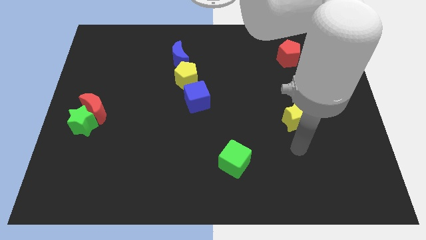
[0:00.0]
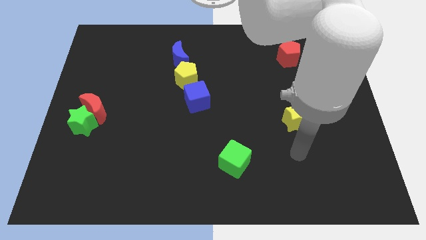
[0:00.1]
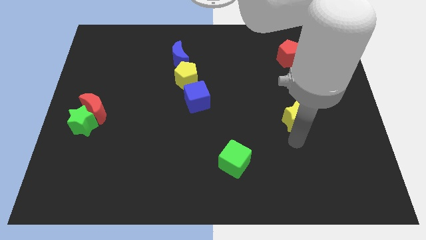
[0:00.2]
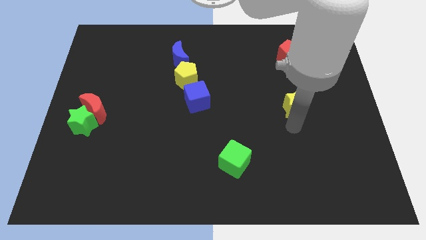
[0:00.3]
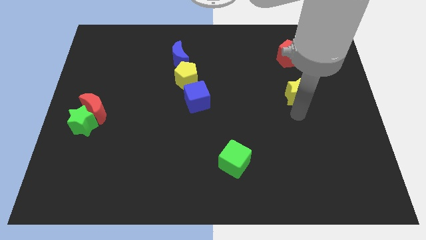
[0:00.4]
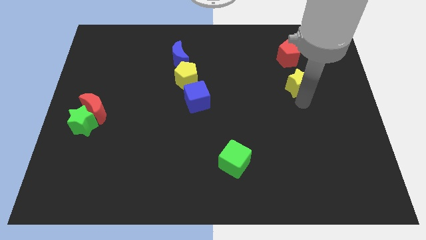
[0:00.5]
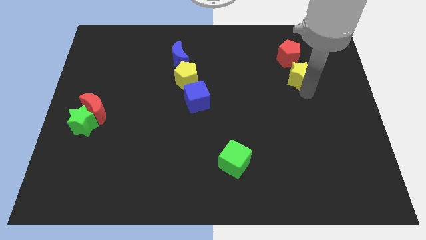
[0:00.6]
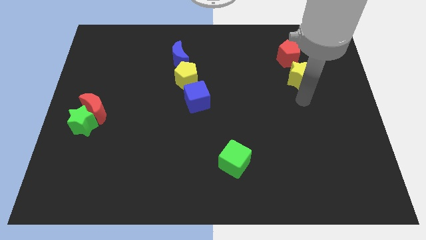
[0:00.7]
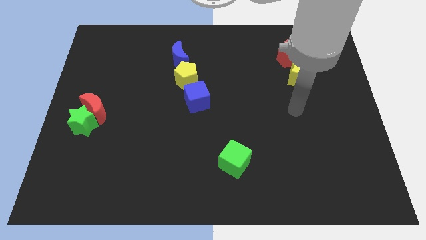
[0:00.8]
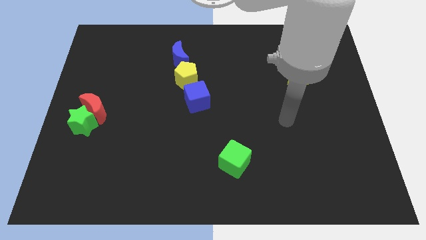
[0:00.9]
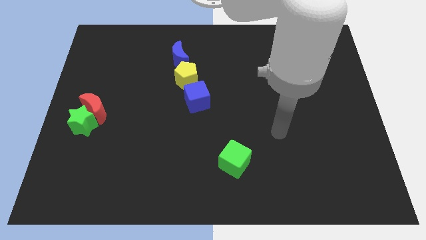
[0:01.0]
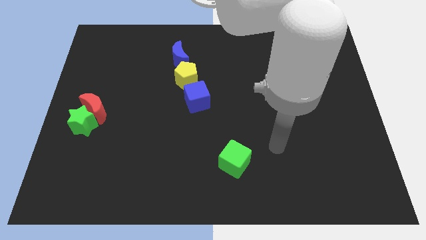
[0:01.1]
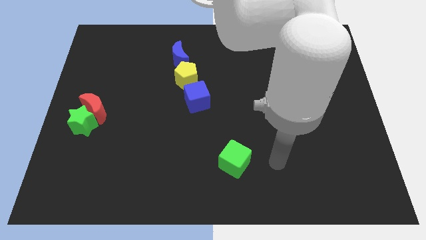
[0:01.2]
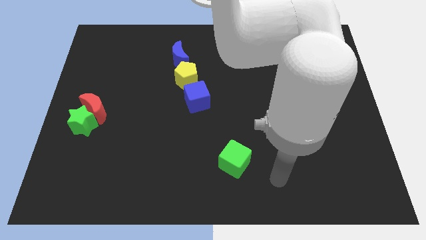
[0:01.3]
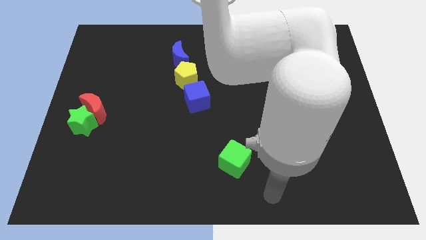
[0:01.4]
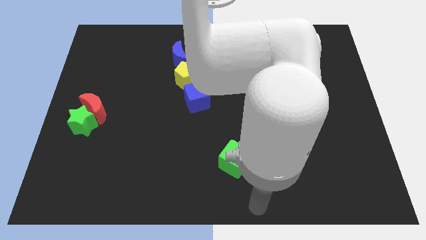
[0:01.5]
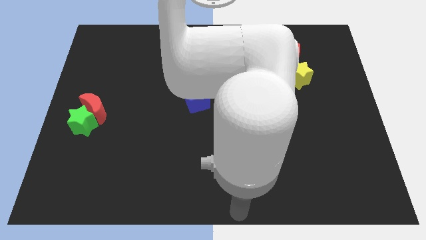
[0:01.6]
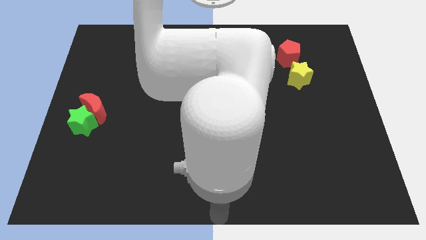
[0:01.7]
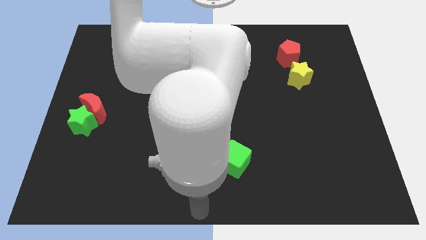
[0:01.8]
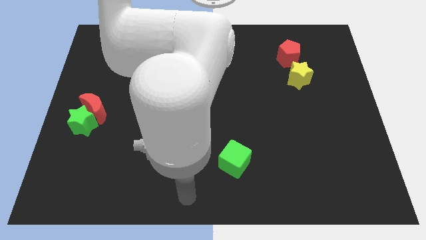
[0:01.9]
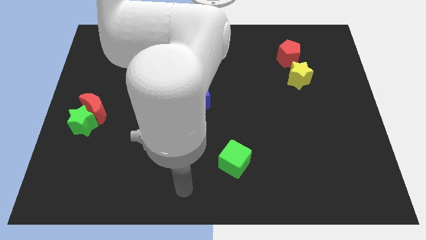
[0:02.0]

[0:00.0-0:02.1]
push the yellow star close to red pentagon

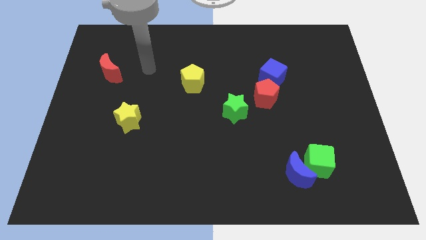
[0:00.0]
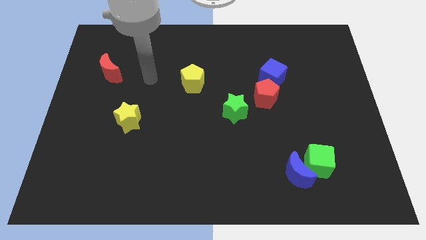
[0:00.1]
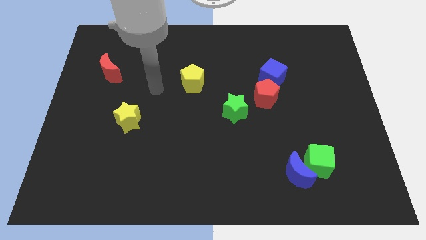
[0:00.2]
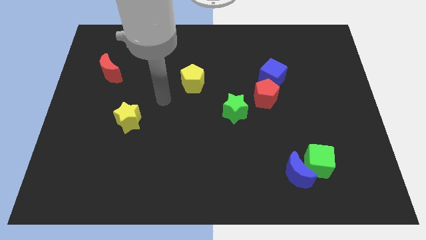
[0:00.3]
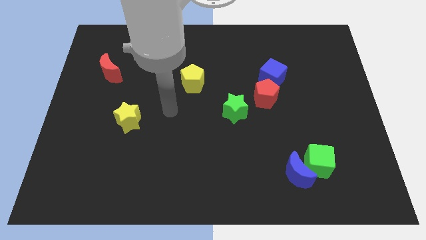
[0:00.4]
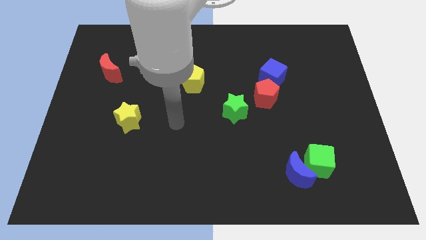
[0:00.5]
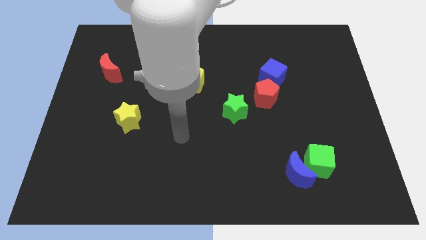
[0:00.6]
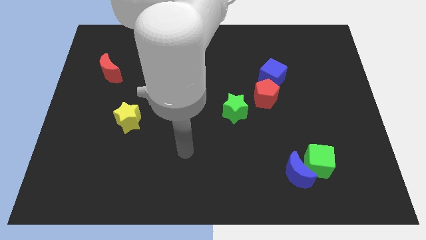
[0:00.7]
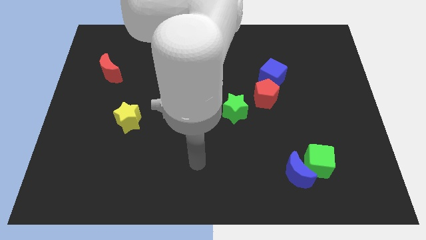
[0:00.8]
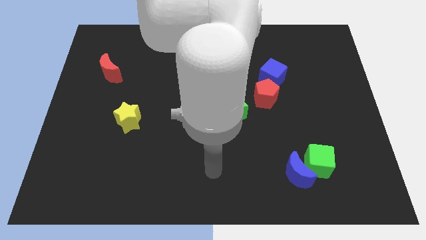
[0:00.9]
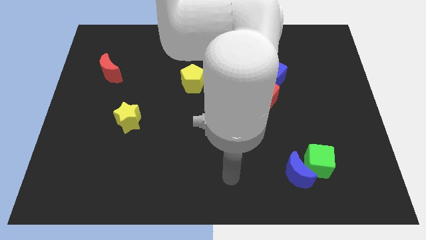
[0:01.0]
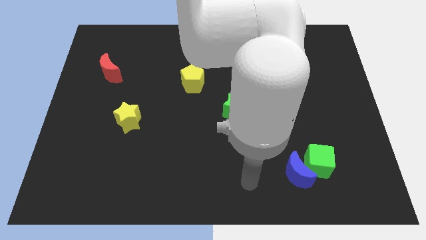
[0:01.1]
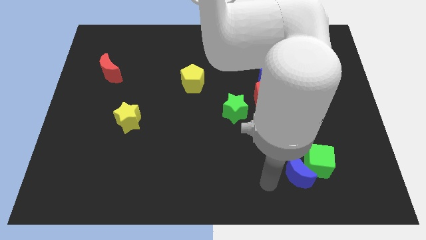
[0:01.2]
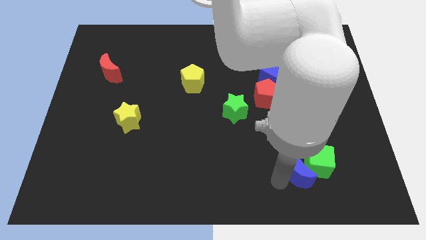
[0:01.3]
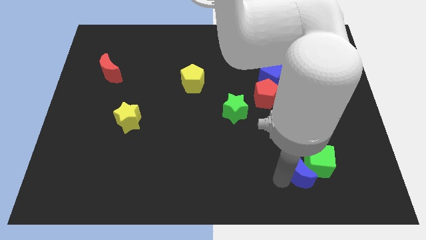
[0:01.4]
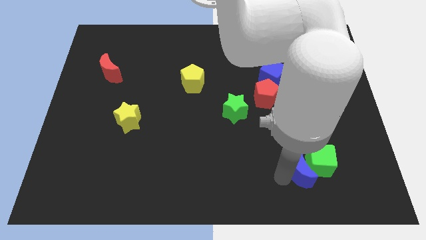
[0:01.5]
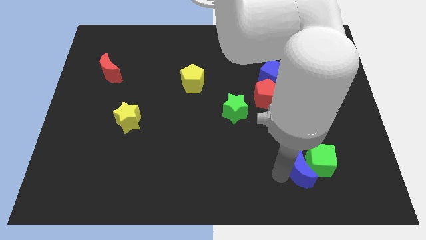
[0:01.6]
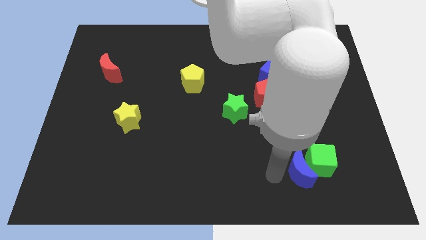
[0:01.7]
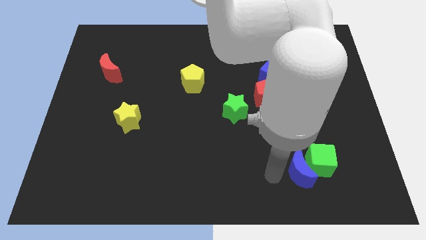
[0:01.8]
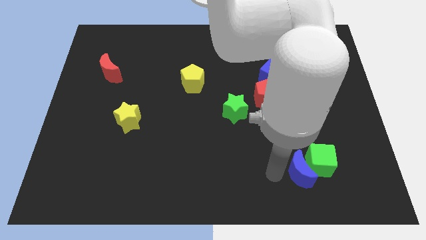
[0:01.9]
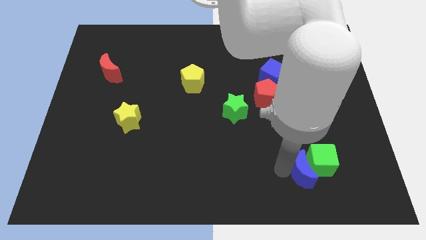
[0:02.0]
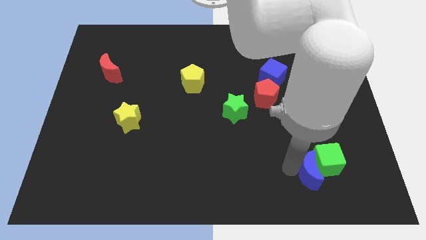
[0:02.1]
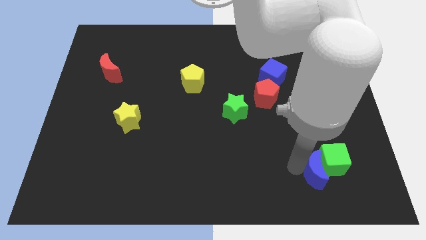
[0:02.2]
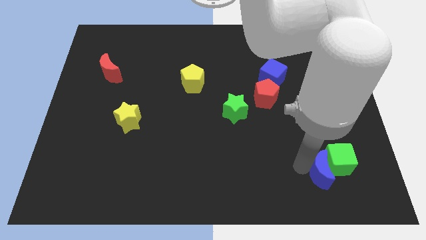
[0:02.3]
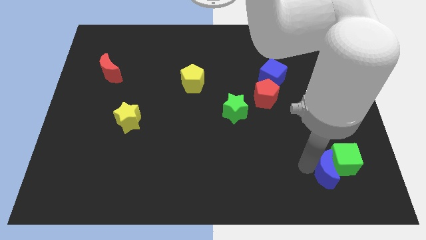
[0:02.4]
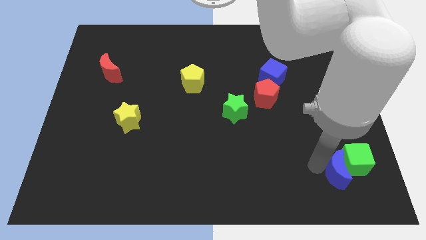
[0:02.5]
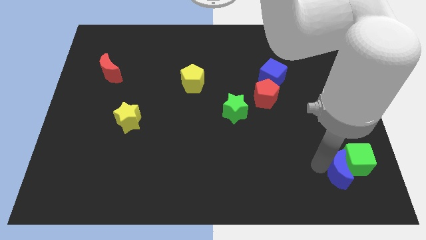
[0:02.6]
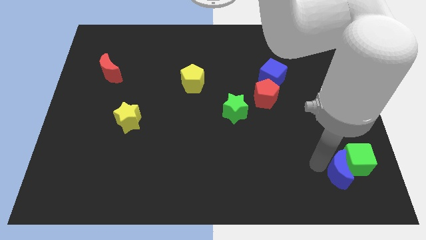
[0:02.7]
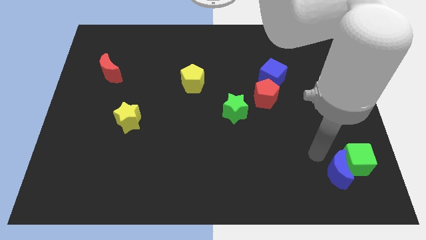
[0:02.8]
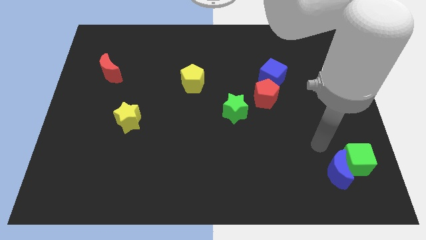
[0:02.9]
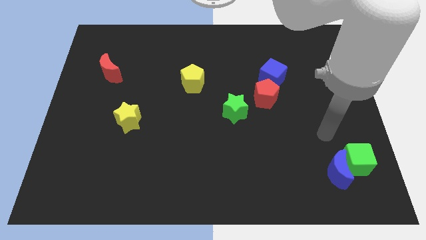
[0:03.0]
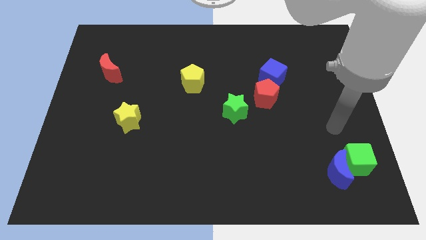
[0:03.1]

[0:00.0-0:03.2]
push the green cube and blue crescent to the right side of the board

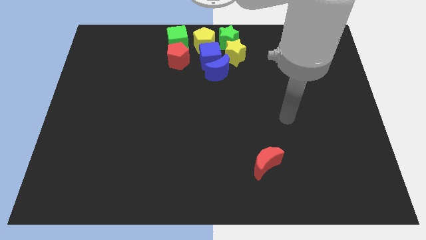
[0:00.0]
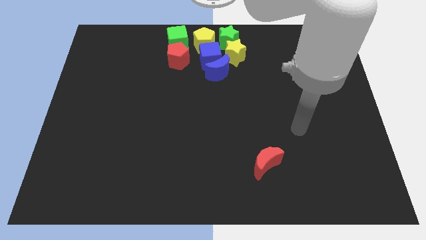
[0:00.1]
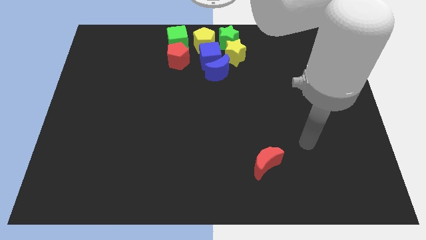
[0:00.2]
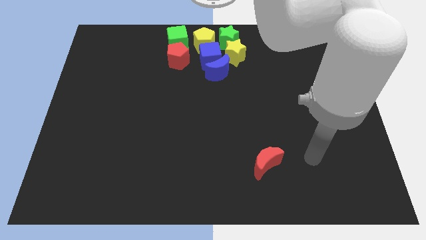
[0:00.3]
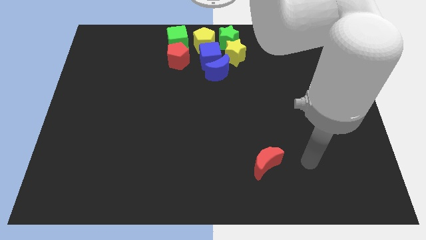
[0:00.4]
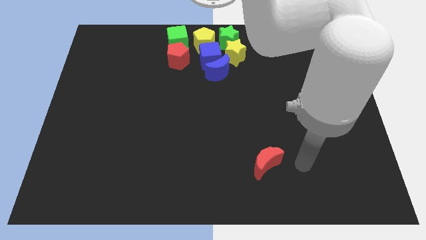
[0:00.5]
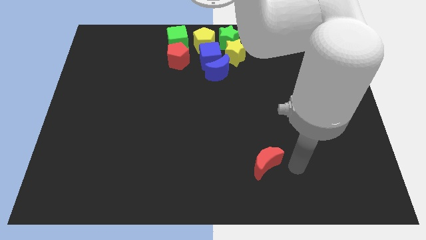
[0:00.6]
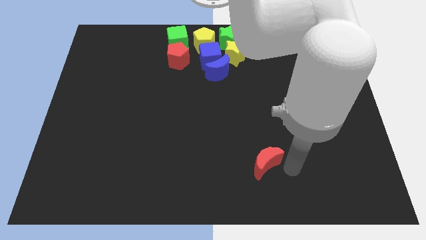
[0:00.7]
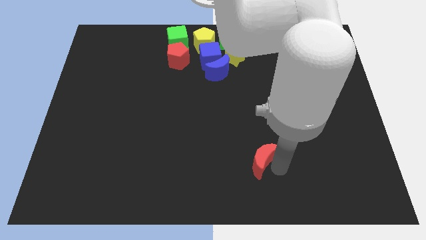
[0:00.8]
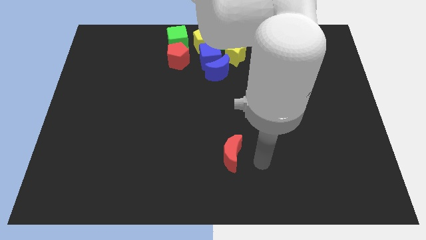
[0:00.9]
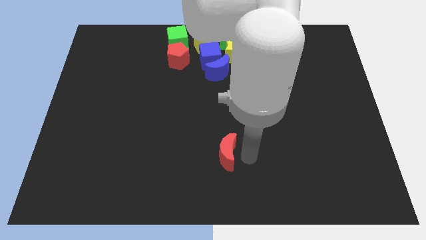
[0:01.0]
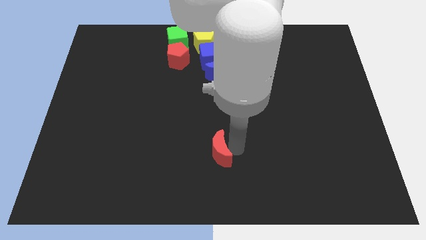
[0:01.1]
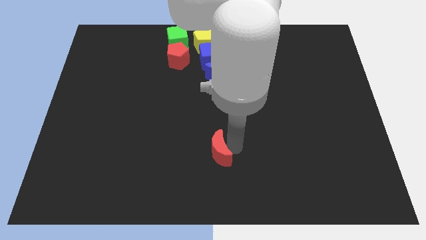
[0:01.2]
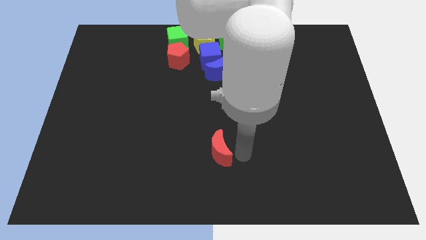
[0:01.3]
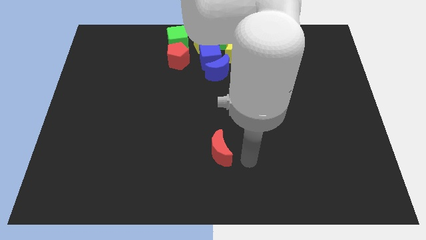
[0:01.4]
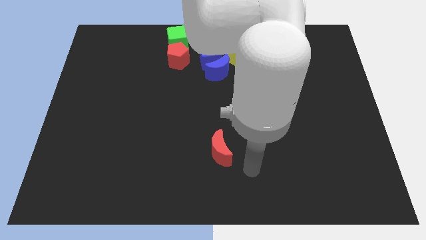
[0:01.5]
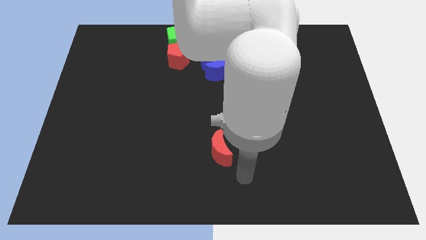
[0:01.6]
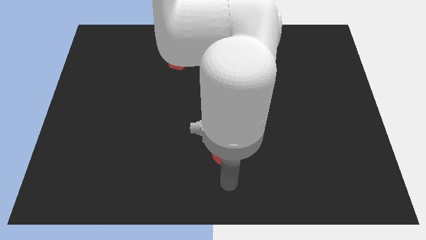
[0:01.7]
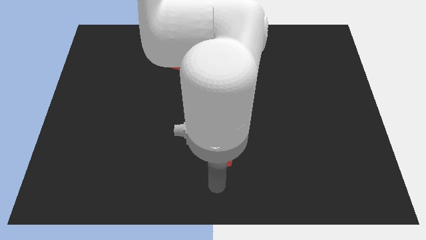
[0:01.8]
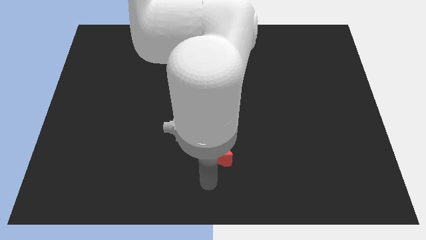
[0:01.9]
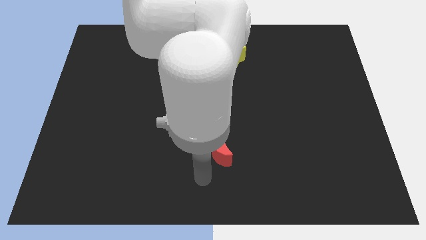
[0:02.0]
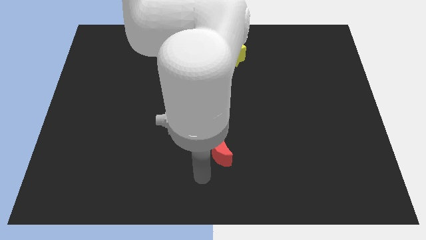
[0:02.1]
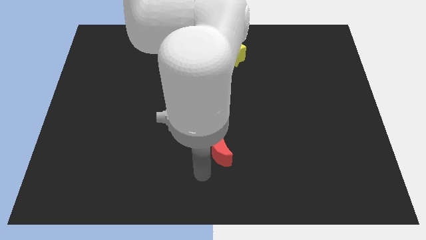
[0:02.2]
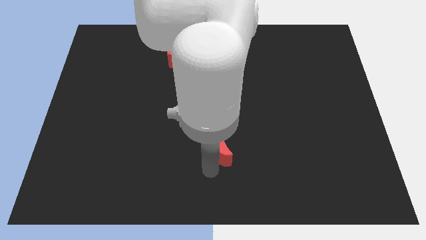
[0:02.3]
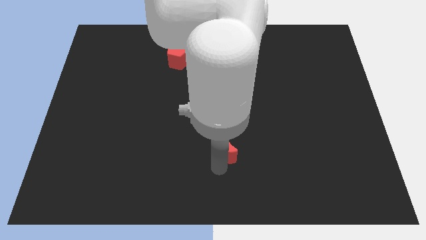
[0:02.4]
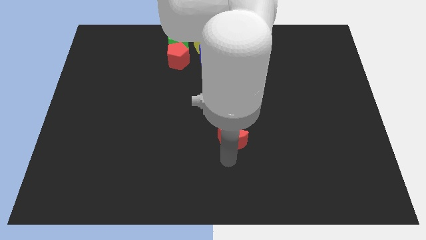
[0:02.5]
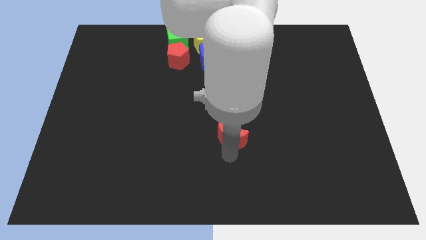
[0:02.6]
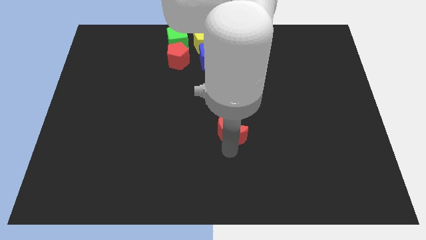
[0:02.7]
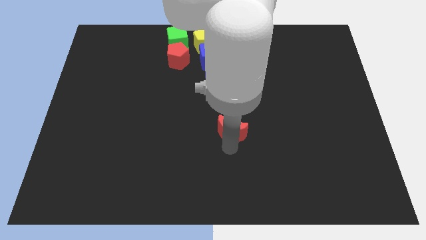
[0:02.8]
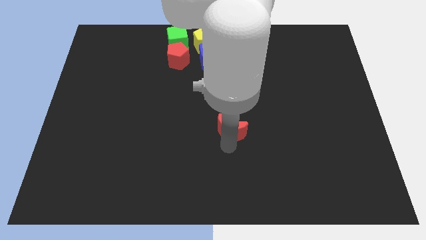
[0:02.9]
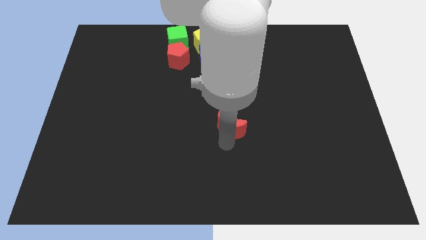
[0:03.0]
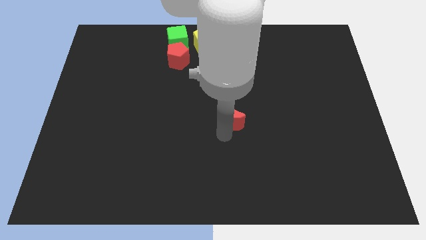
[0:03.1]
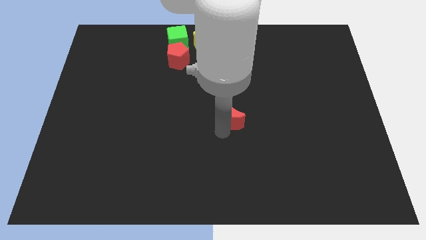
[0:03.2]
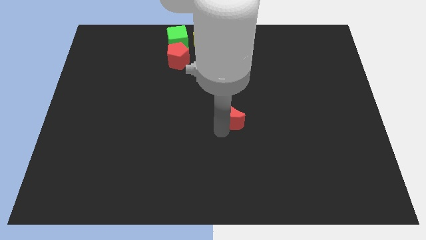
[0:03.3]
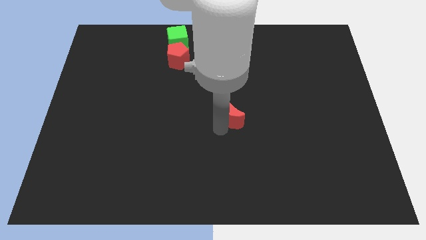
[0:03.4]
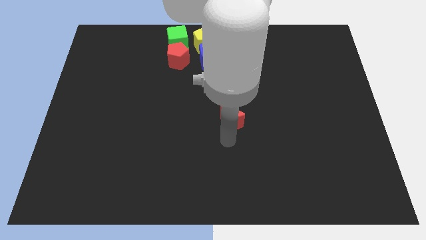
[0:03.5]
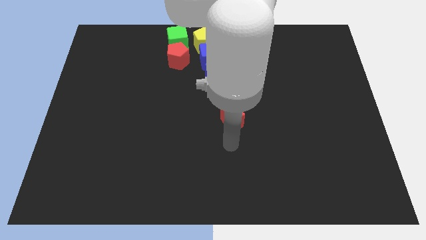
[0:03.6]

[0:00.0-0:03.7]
push the red moon towards the top side of the board
